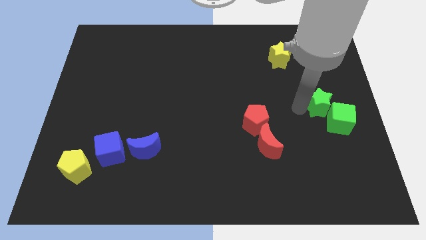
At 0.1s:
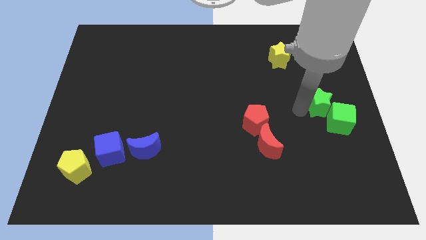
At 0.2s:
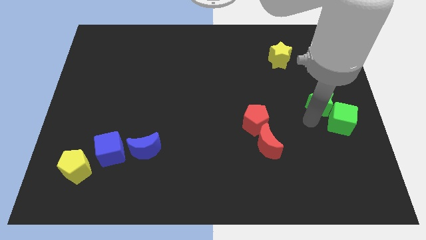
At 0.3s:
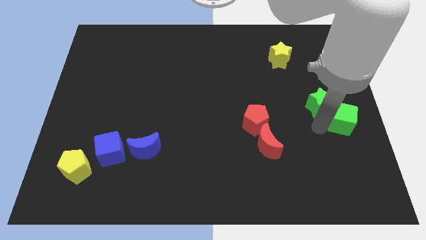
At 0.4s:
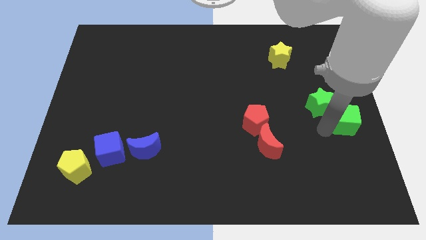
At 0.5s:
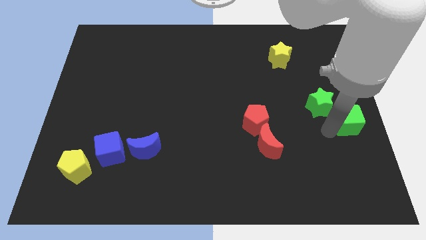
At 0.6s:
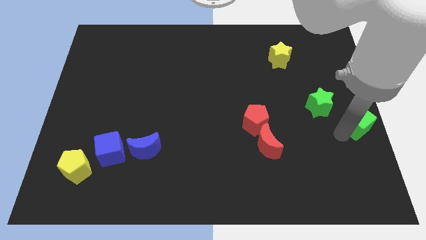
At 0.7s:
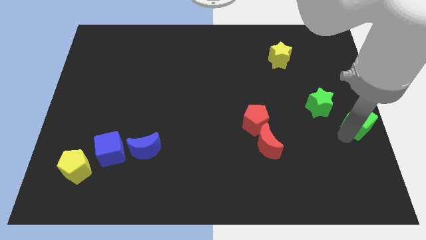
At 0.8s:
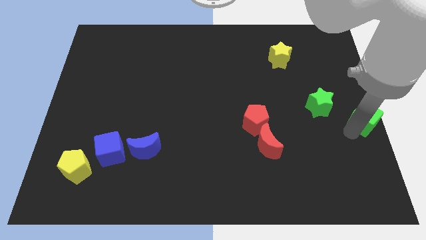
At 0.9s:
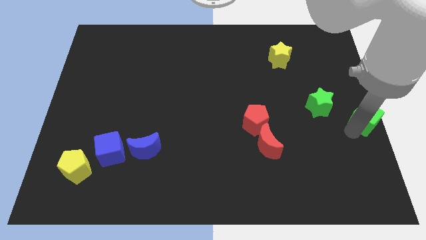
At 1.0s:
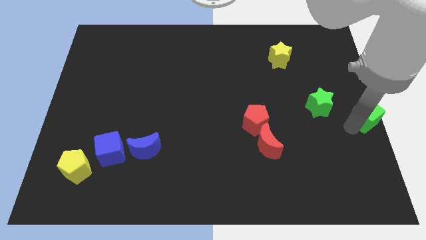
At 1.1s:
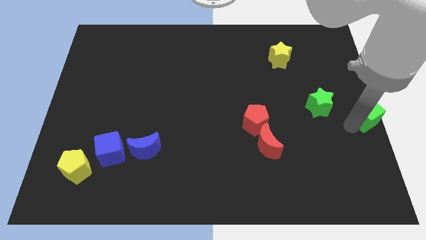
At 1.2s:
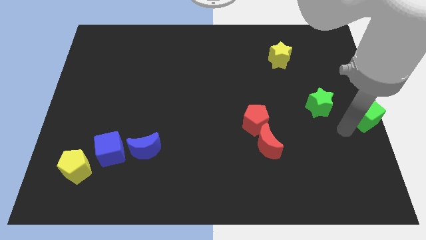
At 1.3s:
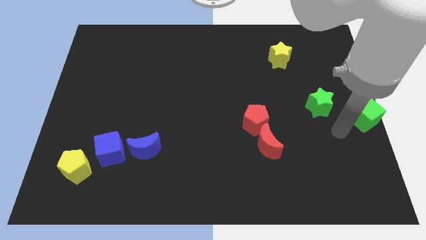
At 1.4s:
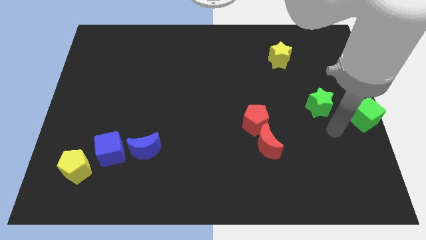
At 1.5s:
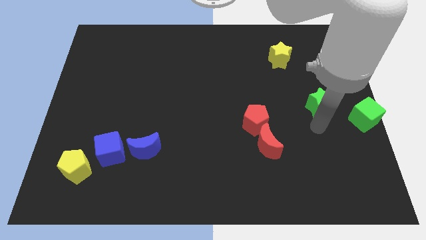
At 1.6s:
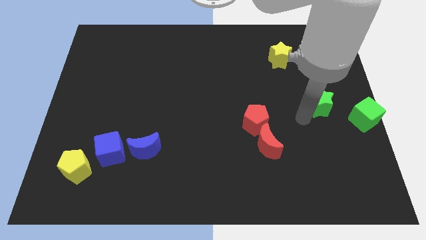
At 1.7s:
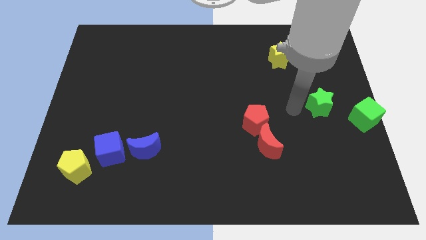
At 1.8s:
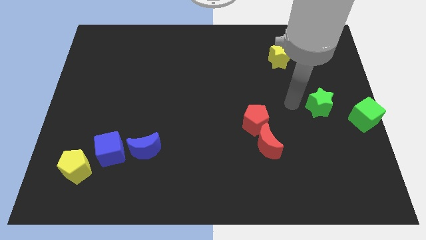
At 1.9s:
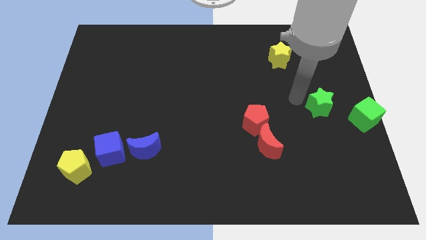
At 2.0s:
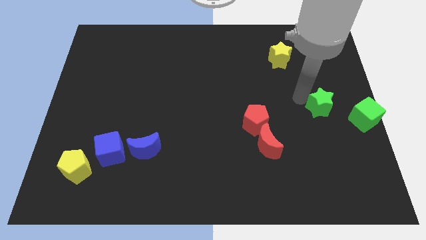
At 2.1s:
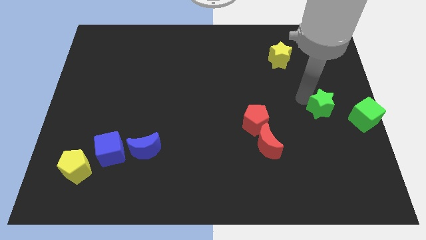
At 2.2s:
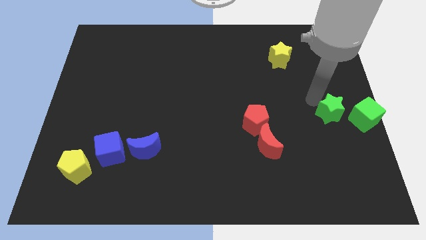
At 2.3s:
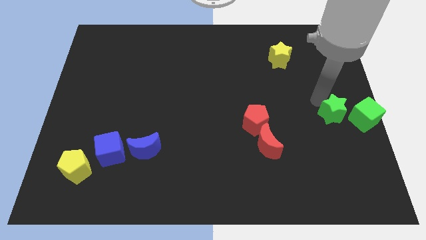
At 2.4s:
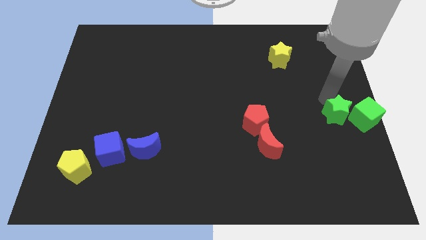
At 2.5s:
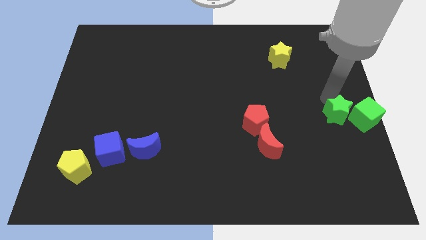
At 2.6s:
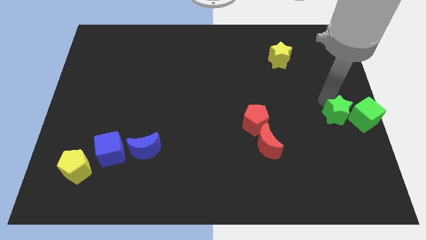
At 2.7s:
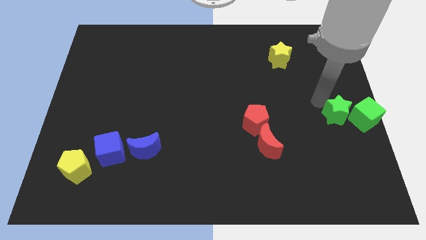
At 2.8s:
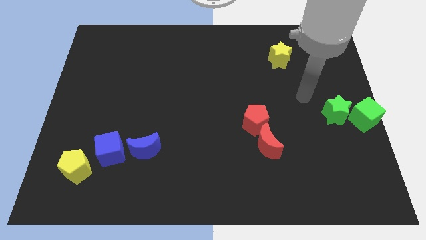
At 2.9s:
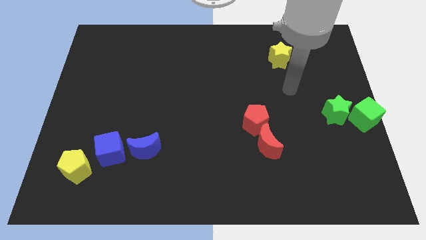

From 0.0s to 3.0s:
place the green star left to the green cube

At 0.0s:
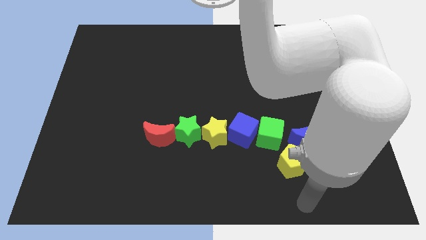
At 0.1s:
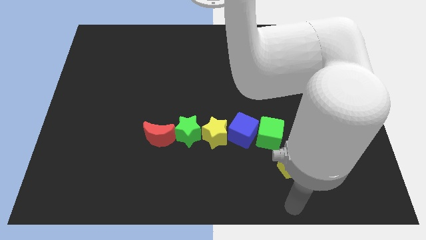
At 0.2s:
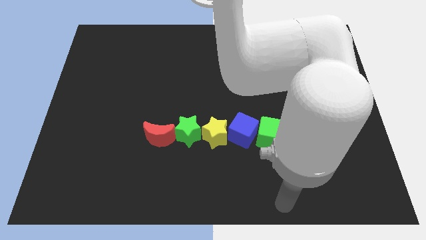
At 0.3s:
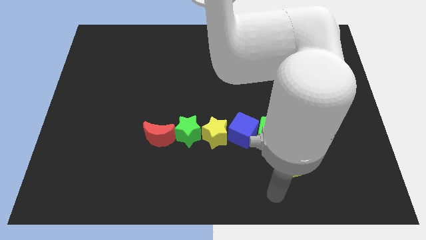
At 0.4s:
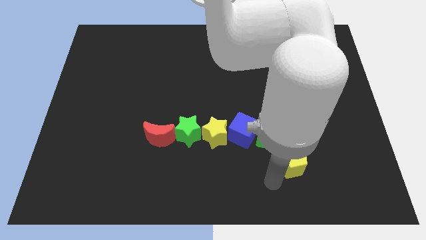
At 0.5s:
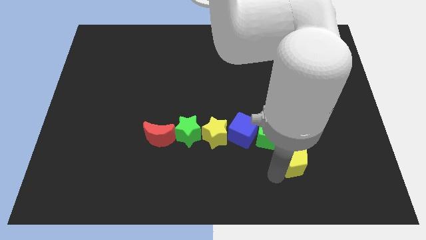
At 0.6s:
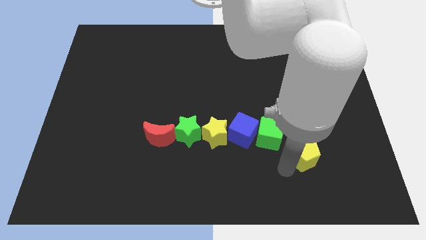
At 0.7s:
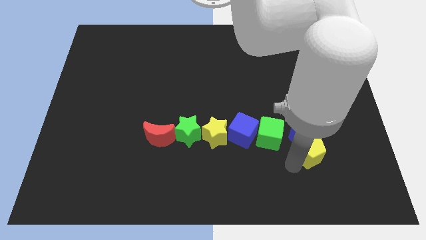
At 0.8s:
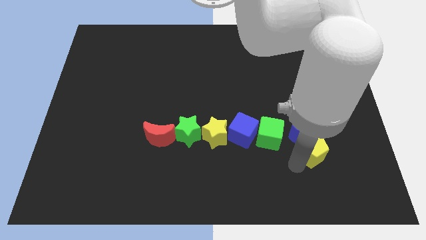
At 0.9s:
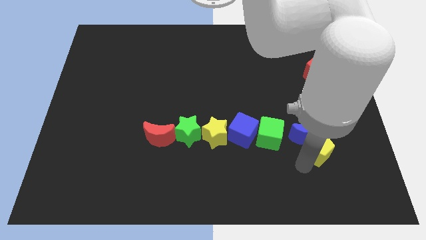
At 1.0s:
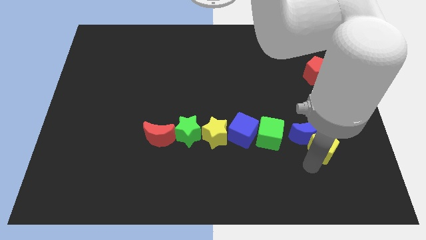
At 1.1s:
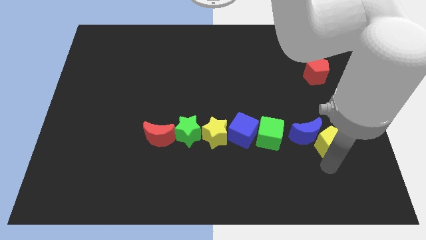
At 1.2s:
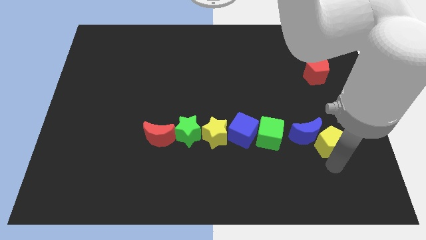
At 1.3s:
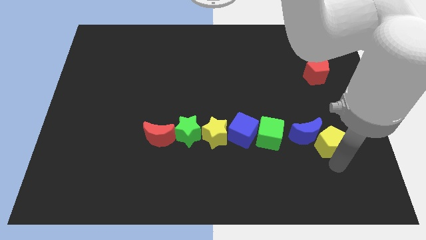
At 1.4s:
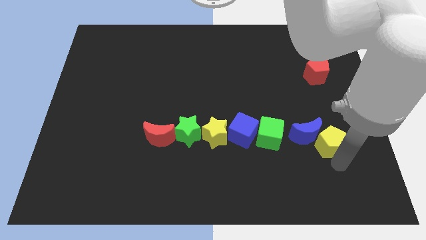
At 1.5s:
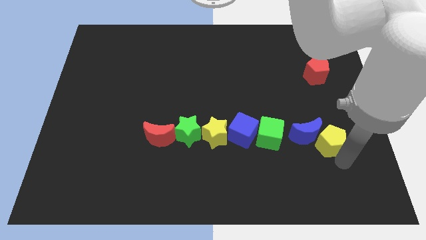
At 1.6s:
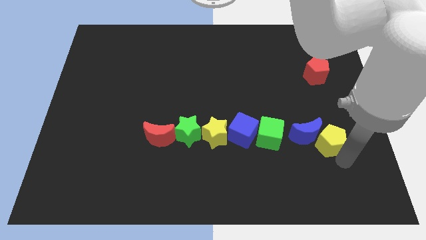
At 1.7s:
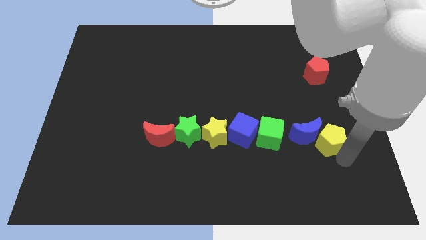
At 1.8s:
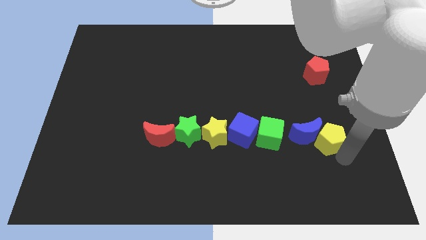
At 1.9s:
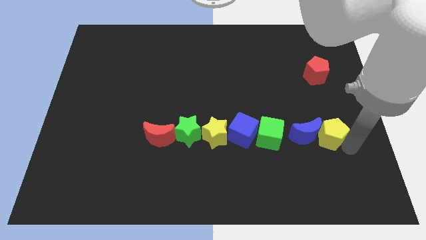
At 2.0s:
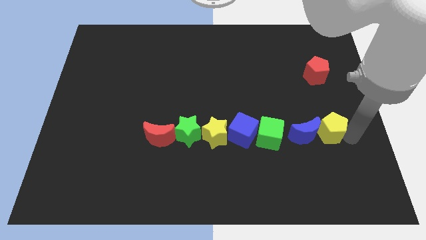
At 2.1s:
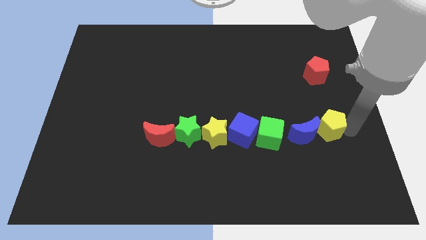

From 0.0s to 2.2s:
place the yellow pentagon close to the blue moon

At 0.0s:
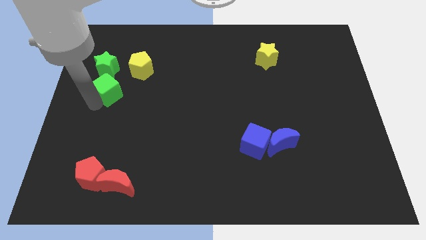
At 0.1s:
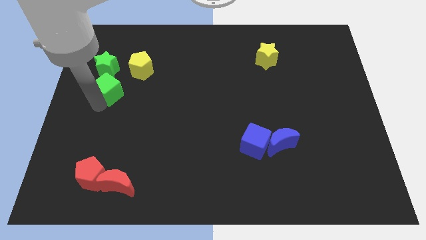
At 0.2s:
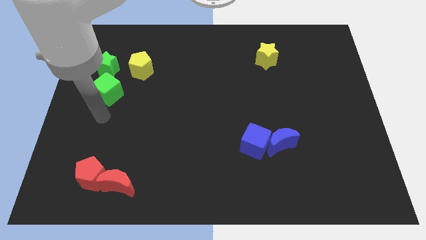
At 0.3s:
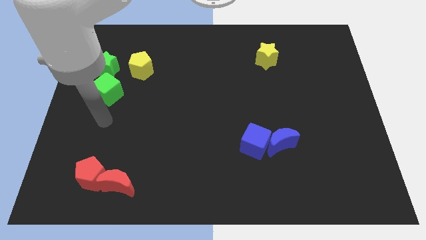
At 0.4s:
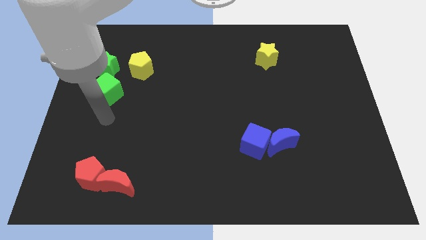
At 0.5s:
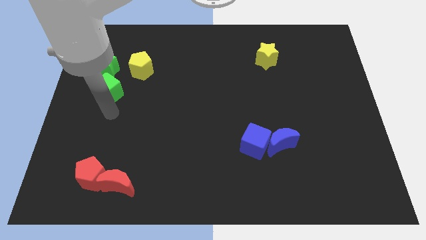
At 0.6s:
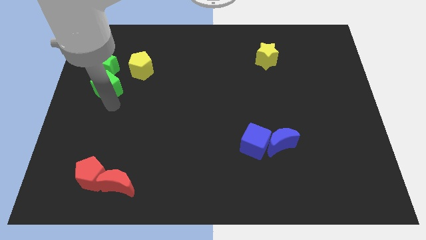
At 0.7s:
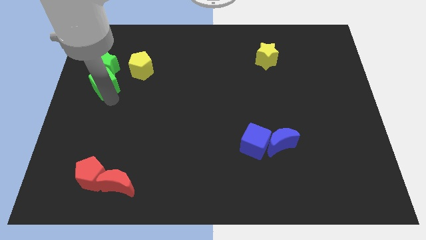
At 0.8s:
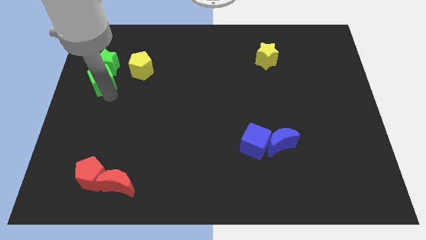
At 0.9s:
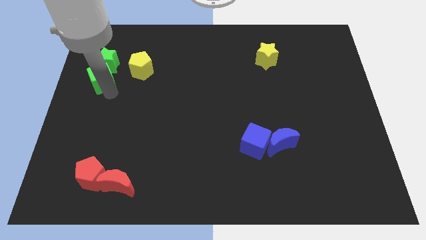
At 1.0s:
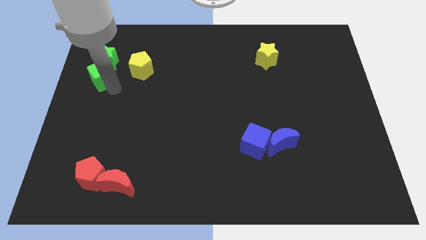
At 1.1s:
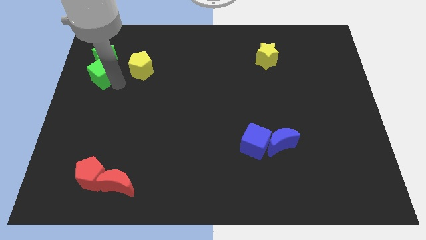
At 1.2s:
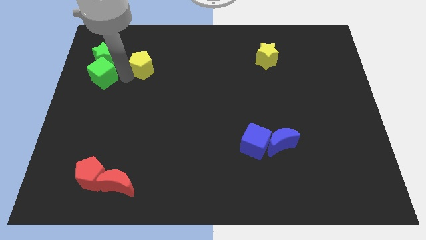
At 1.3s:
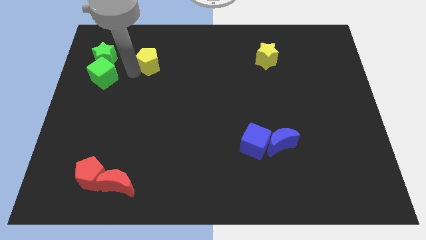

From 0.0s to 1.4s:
place your arm between green cube and yellow pentagon

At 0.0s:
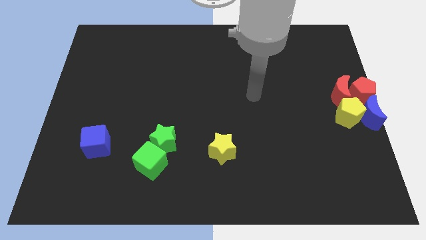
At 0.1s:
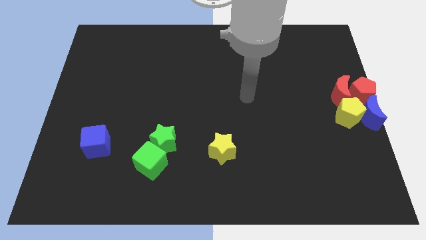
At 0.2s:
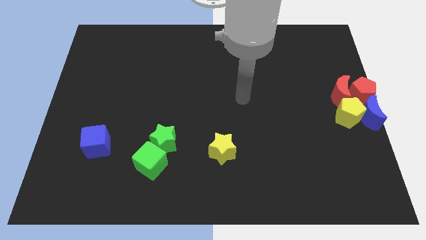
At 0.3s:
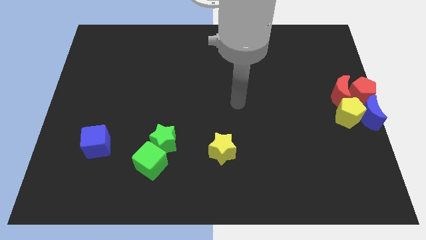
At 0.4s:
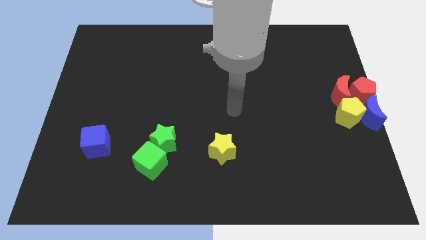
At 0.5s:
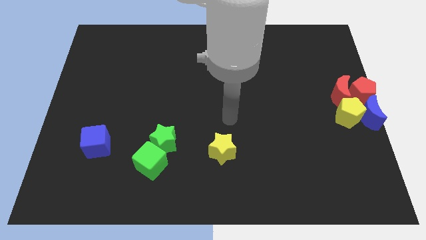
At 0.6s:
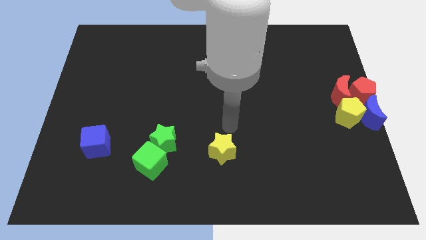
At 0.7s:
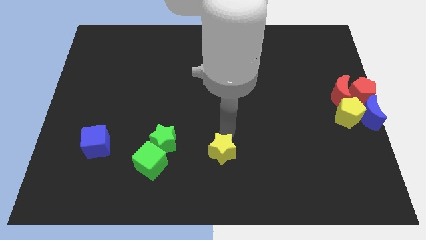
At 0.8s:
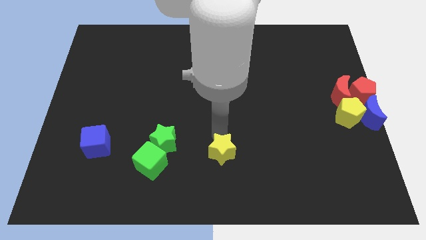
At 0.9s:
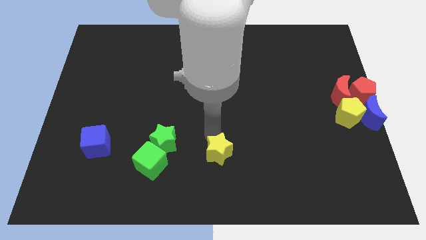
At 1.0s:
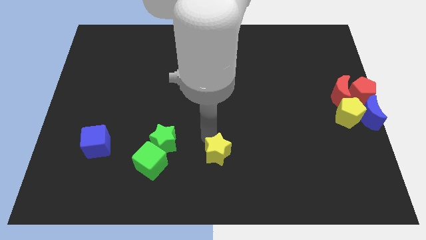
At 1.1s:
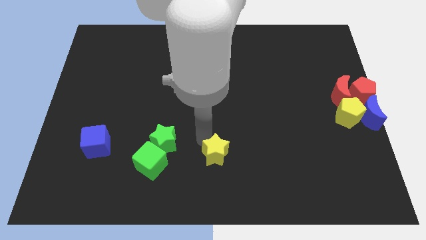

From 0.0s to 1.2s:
slightly touch to the yellow star

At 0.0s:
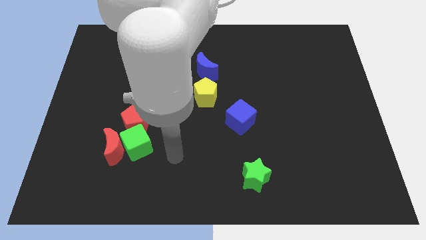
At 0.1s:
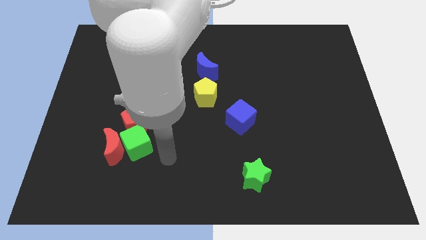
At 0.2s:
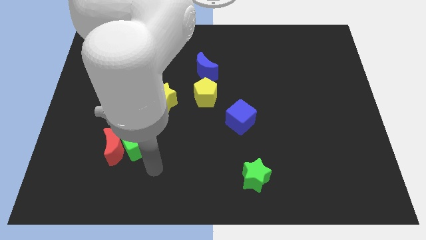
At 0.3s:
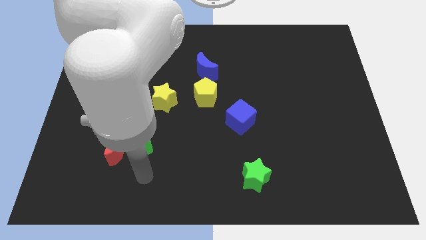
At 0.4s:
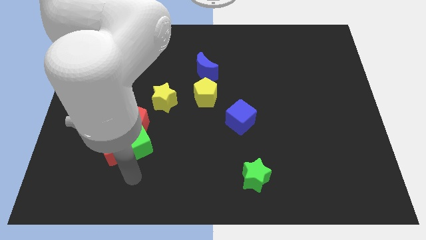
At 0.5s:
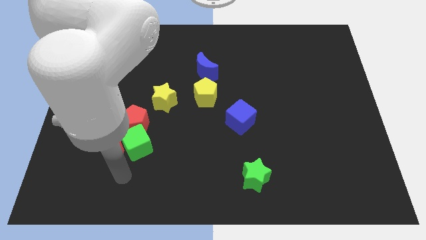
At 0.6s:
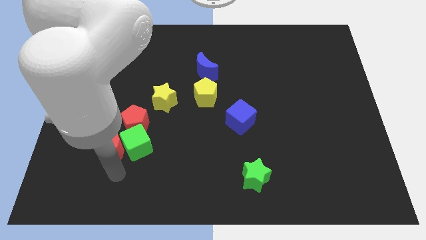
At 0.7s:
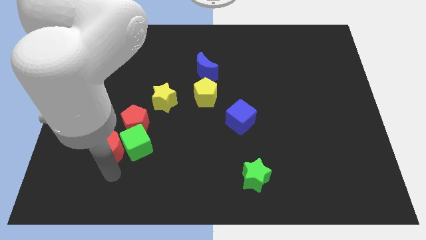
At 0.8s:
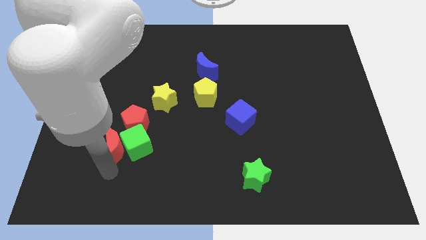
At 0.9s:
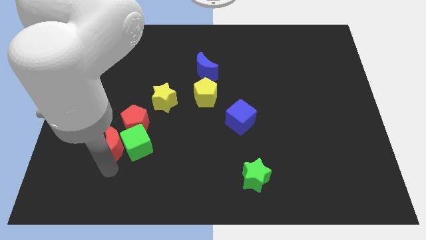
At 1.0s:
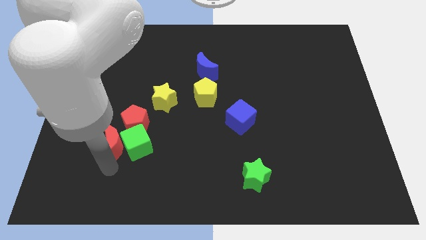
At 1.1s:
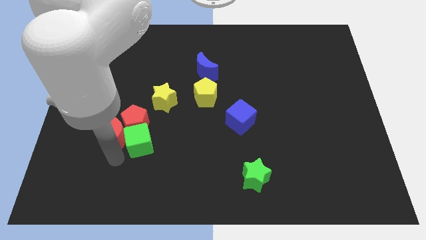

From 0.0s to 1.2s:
move your arm towards the red moon
